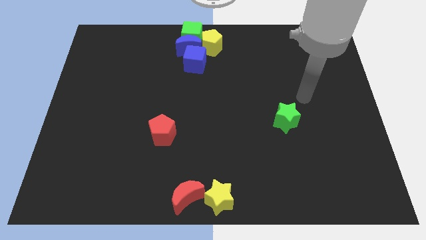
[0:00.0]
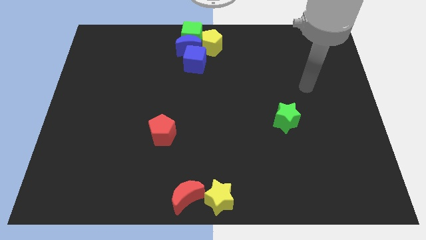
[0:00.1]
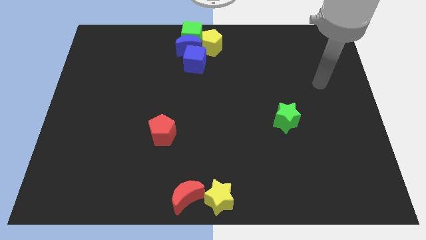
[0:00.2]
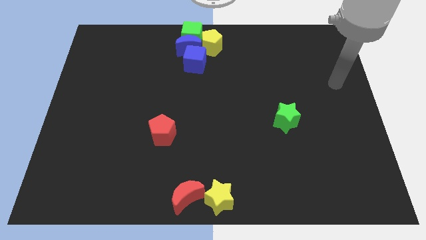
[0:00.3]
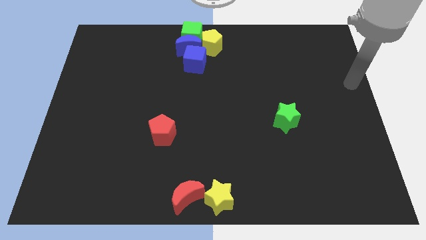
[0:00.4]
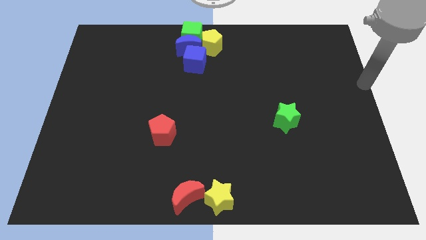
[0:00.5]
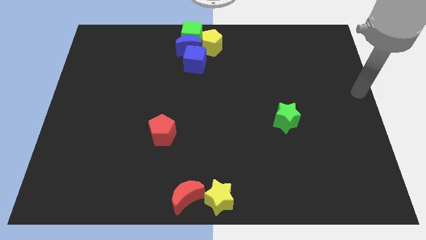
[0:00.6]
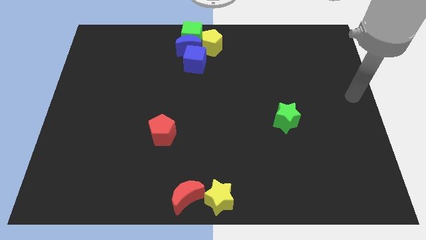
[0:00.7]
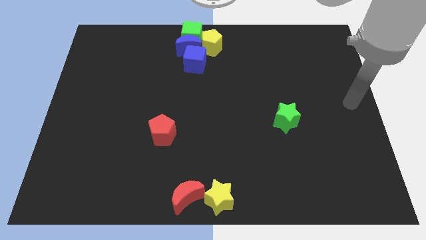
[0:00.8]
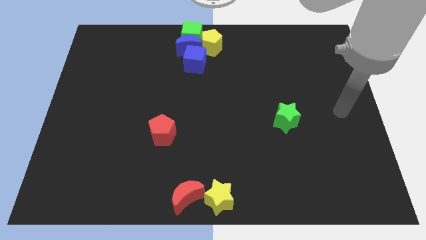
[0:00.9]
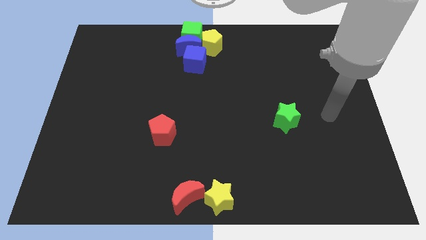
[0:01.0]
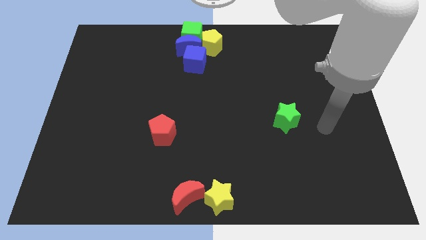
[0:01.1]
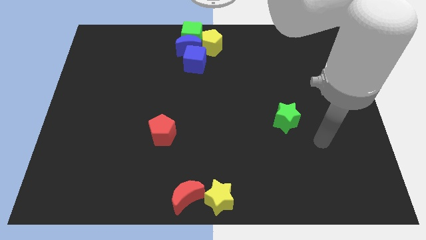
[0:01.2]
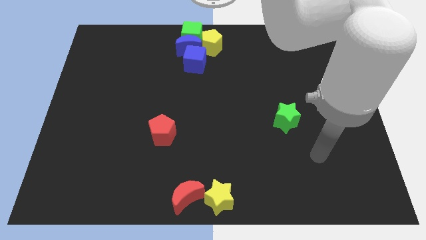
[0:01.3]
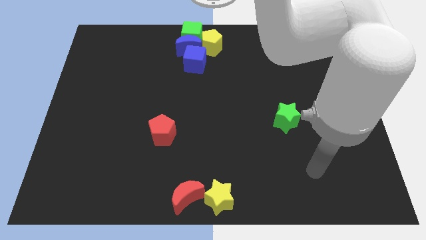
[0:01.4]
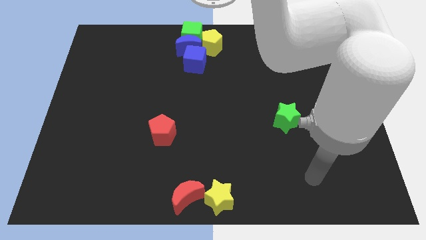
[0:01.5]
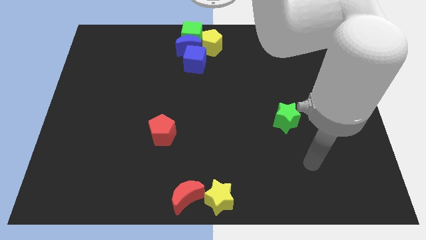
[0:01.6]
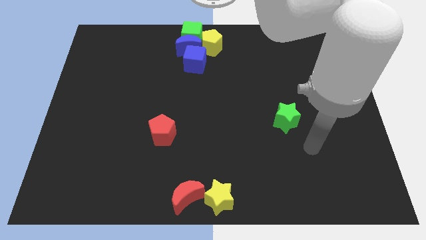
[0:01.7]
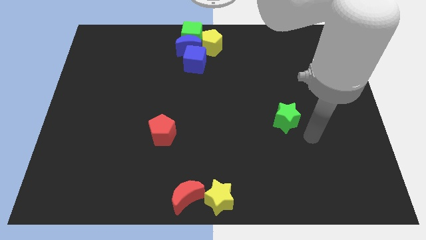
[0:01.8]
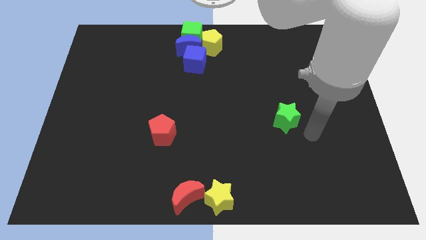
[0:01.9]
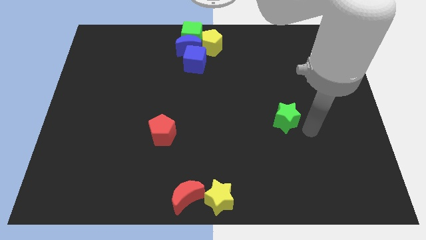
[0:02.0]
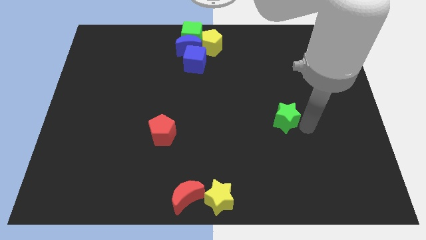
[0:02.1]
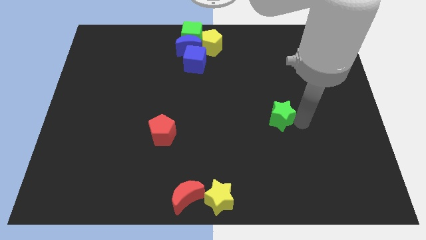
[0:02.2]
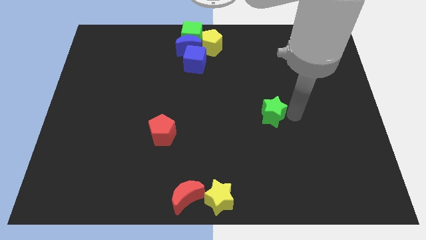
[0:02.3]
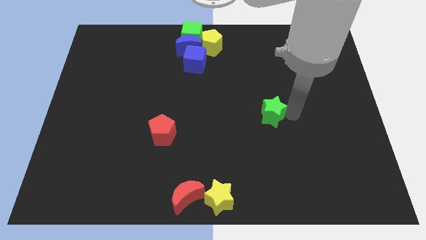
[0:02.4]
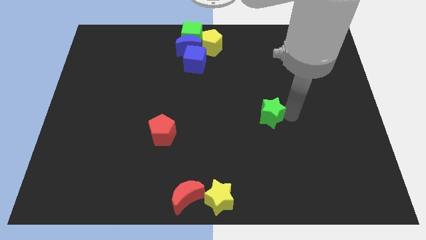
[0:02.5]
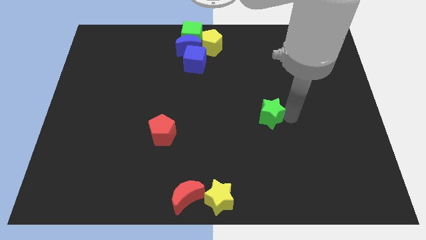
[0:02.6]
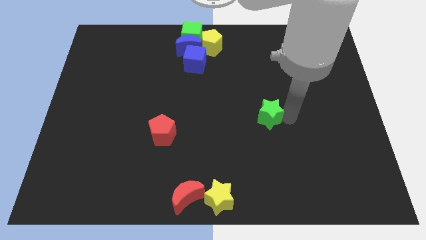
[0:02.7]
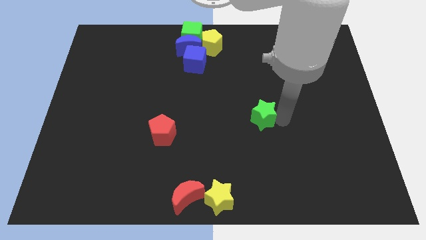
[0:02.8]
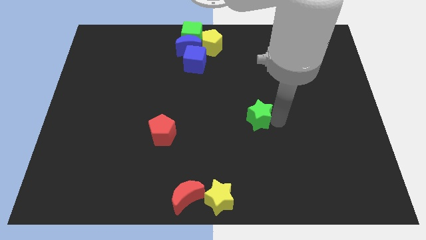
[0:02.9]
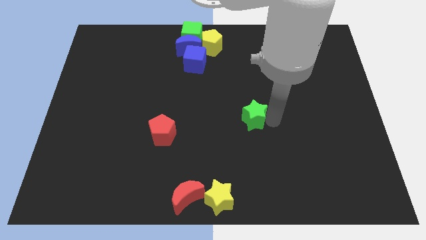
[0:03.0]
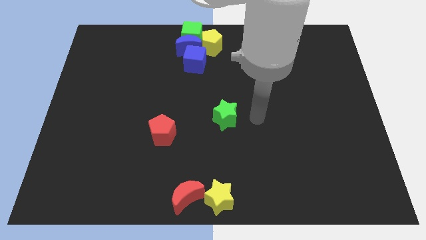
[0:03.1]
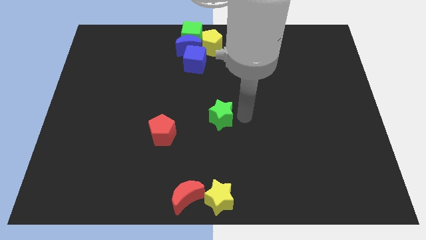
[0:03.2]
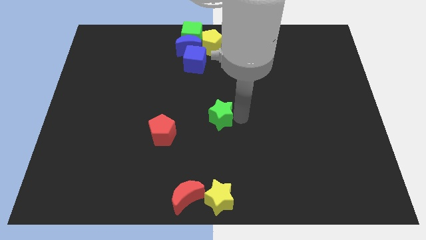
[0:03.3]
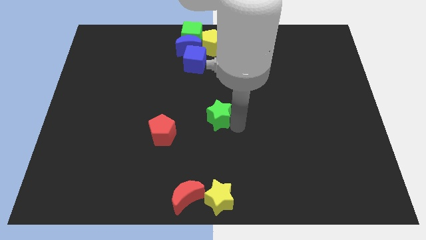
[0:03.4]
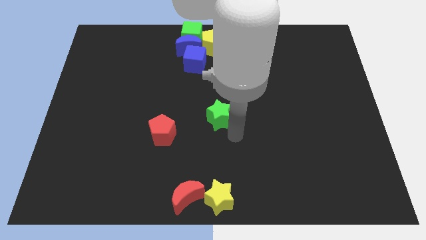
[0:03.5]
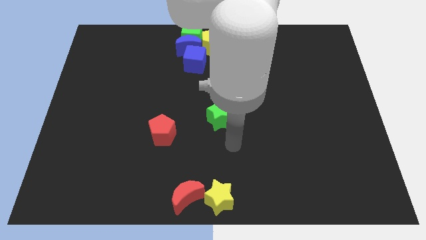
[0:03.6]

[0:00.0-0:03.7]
move the green star towards the right side of the red pentagon

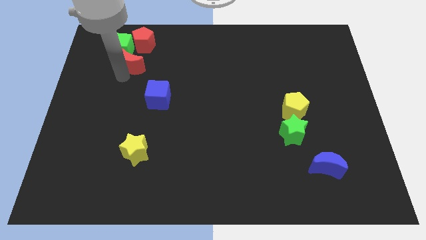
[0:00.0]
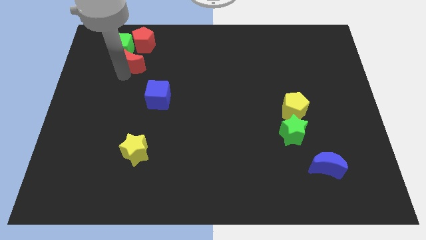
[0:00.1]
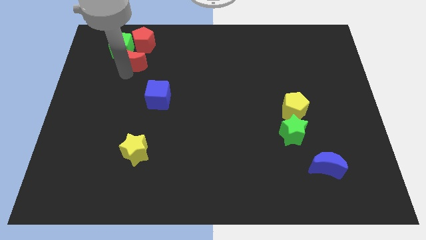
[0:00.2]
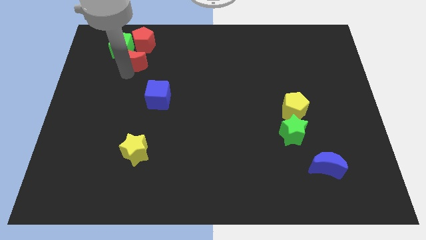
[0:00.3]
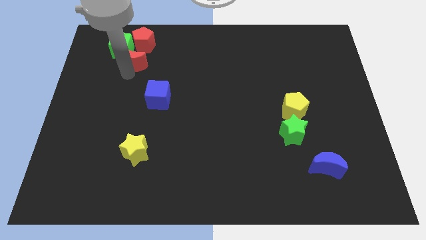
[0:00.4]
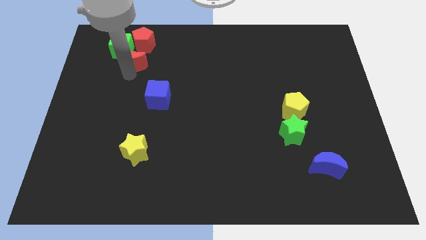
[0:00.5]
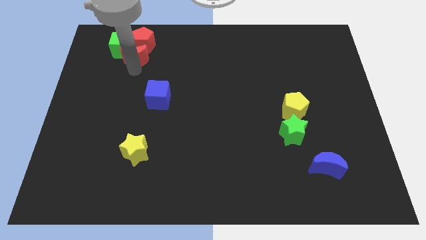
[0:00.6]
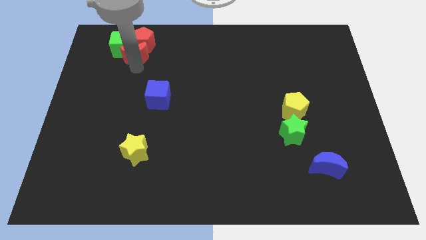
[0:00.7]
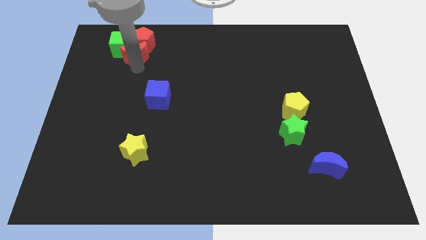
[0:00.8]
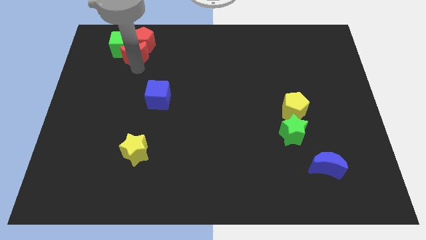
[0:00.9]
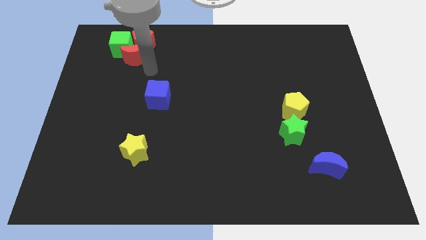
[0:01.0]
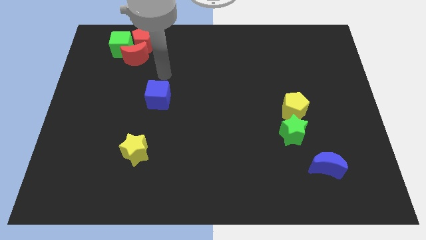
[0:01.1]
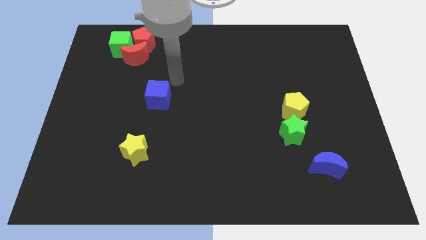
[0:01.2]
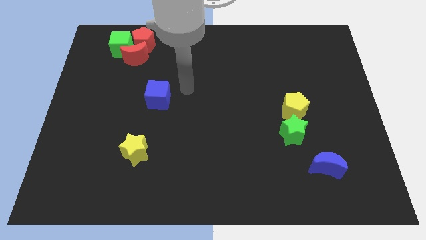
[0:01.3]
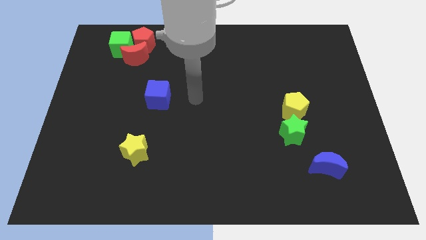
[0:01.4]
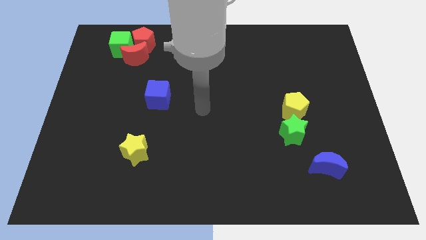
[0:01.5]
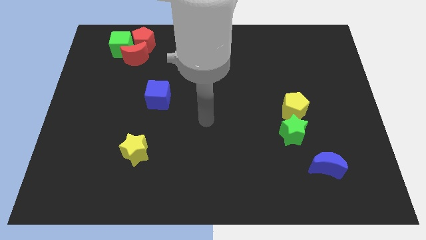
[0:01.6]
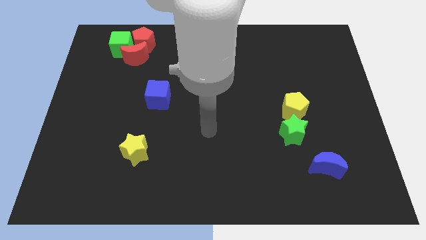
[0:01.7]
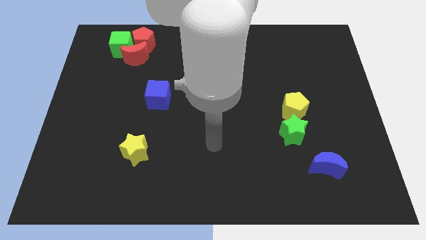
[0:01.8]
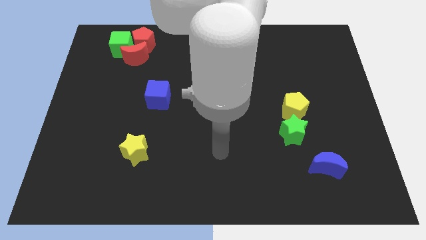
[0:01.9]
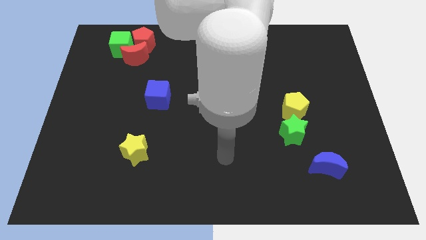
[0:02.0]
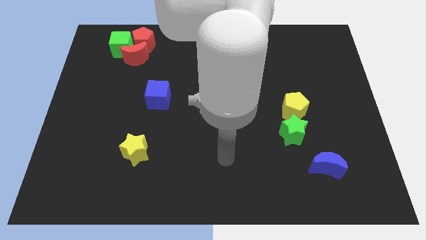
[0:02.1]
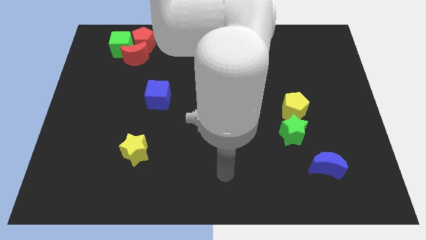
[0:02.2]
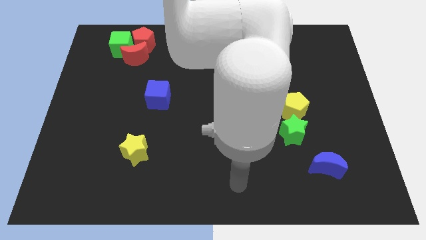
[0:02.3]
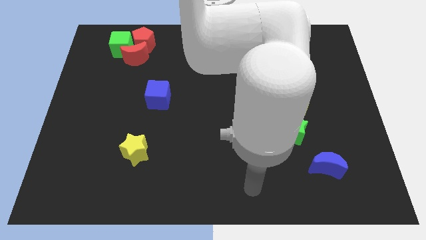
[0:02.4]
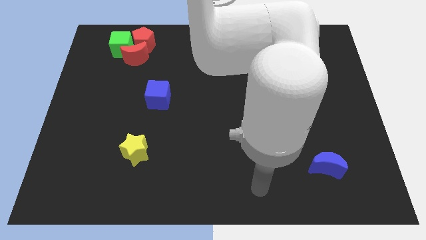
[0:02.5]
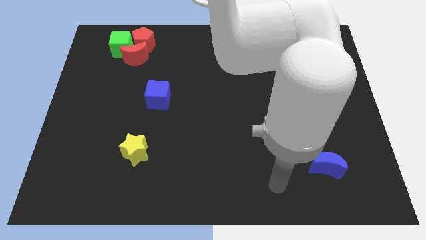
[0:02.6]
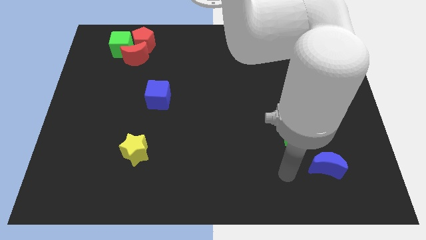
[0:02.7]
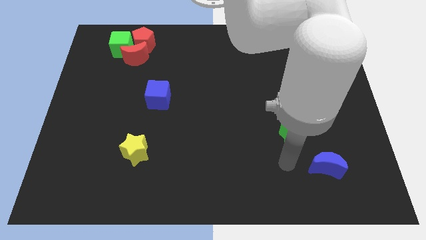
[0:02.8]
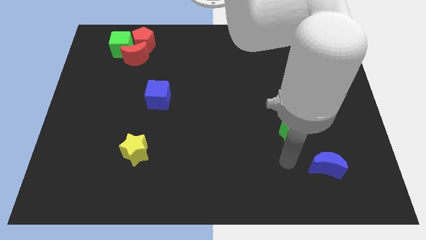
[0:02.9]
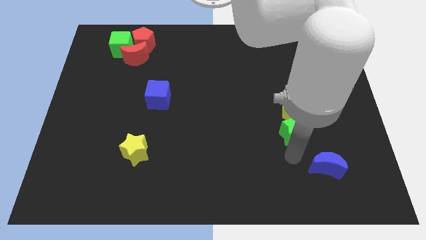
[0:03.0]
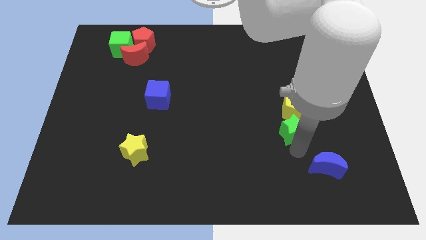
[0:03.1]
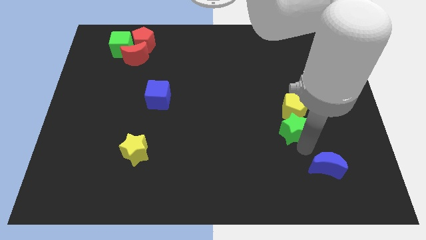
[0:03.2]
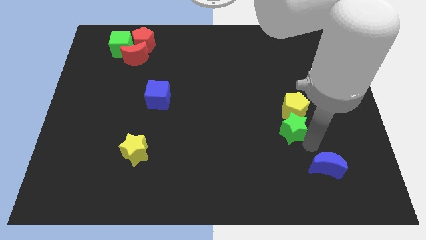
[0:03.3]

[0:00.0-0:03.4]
point your arm below the green star

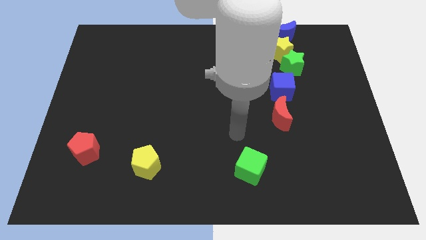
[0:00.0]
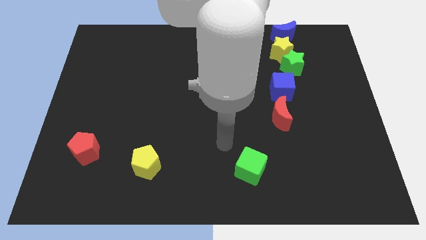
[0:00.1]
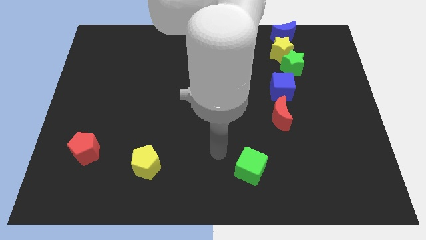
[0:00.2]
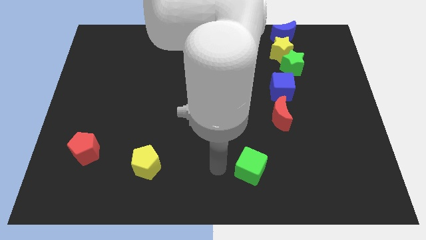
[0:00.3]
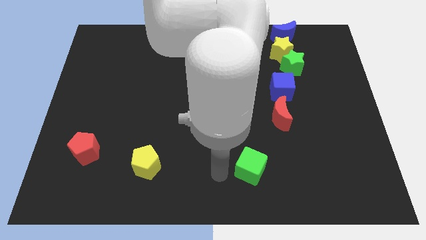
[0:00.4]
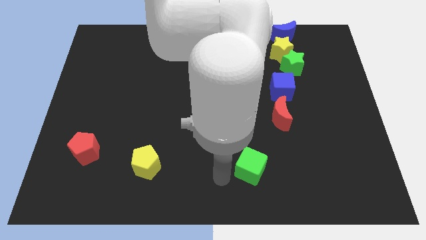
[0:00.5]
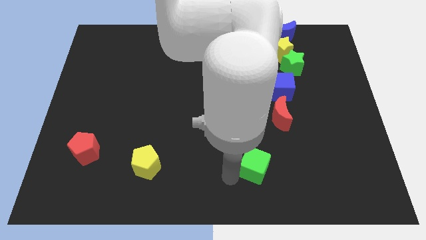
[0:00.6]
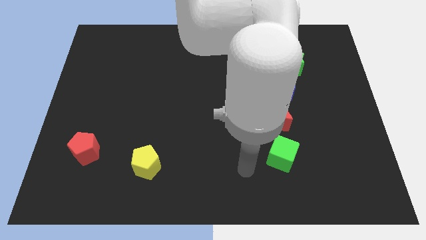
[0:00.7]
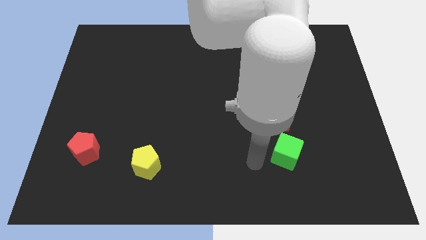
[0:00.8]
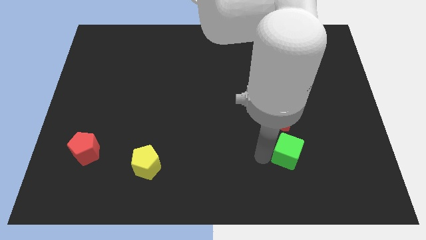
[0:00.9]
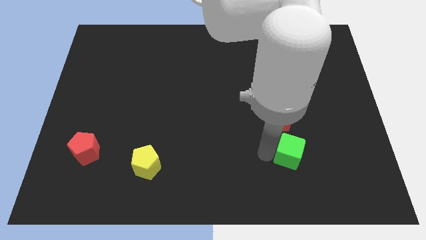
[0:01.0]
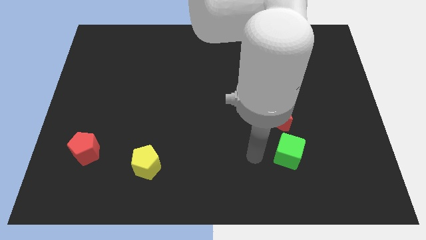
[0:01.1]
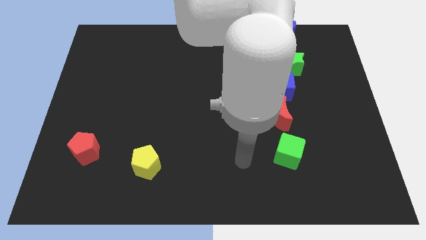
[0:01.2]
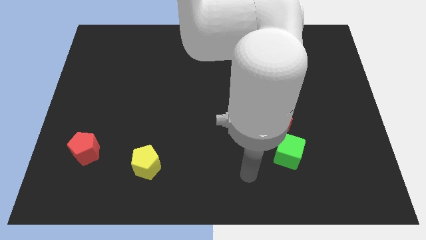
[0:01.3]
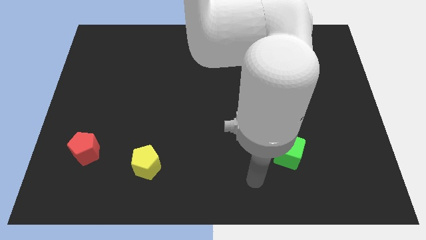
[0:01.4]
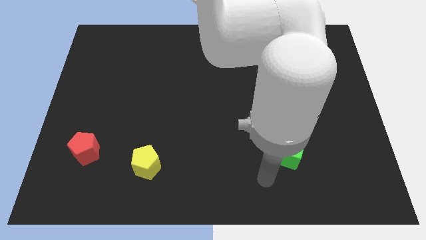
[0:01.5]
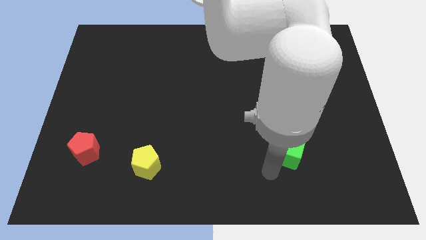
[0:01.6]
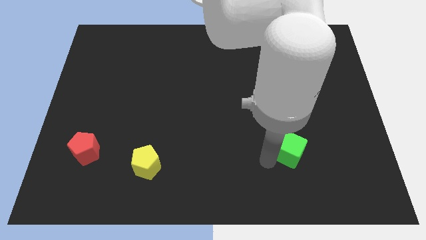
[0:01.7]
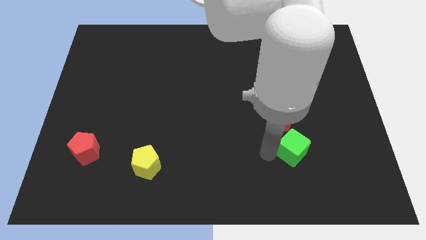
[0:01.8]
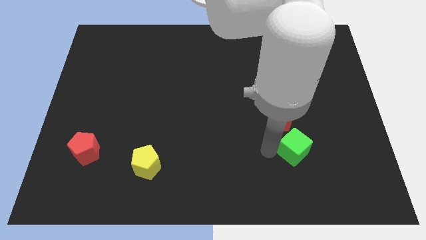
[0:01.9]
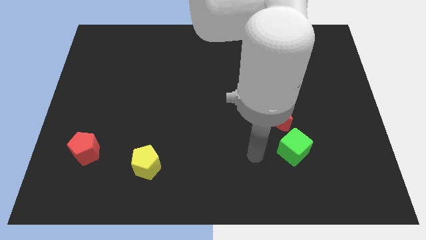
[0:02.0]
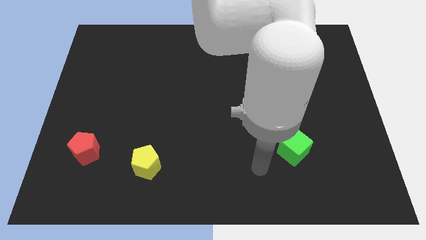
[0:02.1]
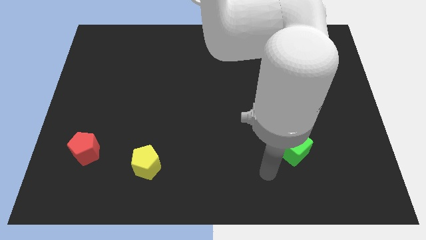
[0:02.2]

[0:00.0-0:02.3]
place the green cube below red moon
